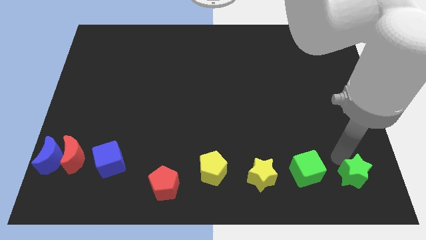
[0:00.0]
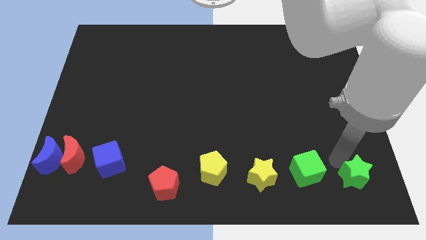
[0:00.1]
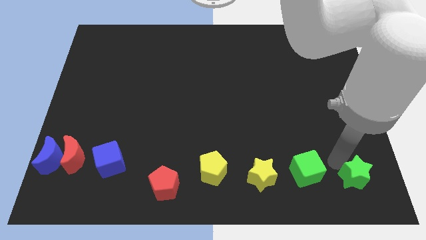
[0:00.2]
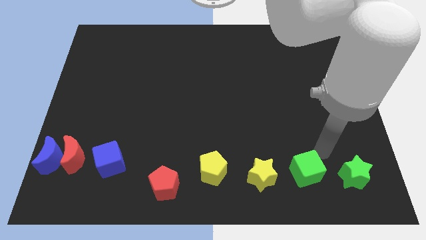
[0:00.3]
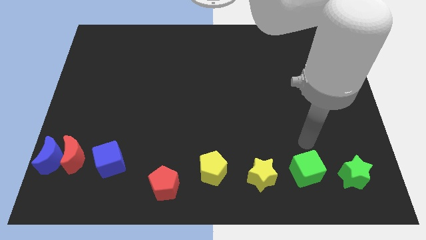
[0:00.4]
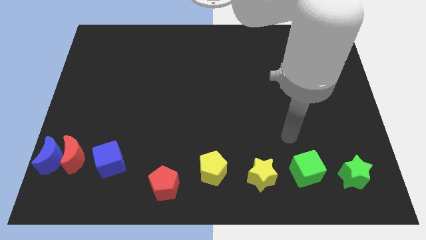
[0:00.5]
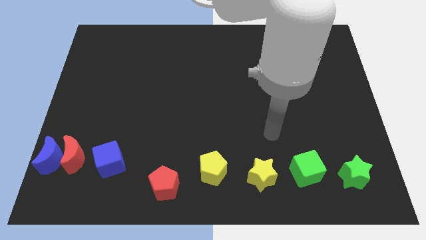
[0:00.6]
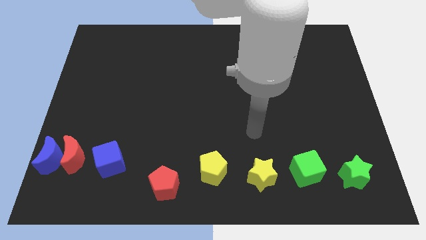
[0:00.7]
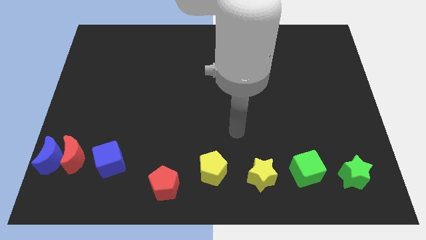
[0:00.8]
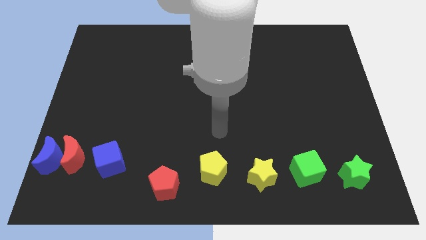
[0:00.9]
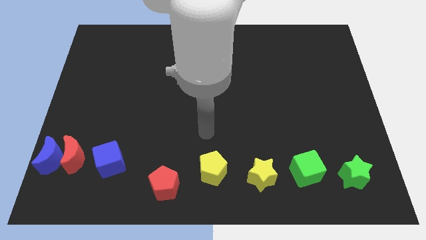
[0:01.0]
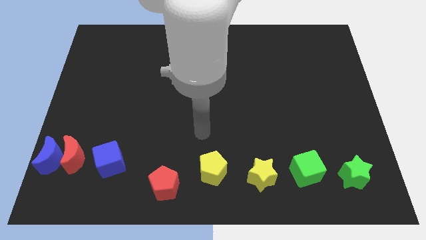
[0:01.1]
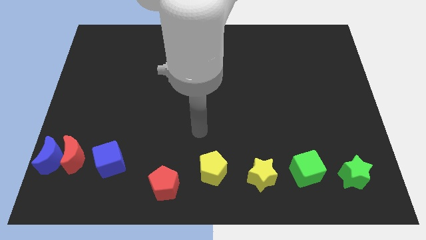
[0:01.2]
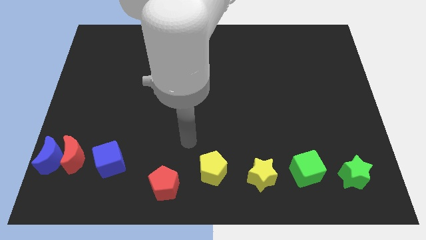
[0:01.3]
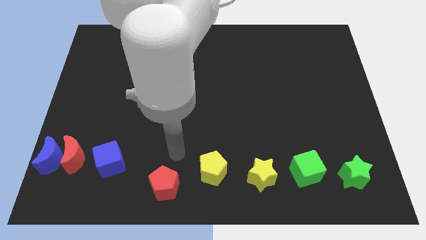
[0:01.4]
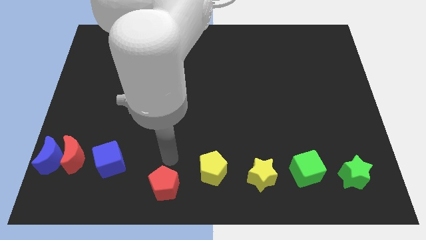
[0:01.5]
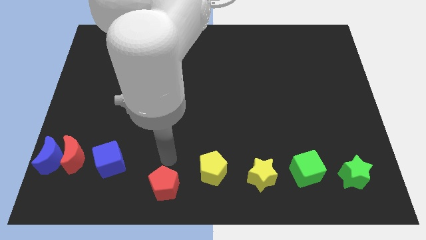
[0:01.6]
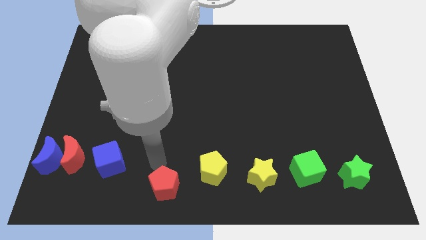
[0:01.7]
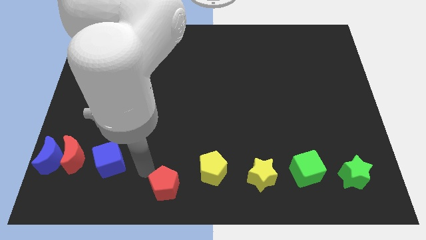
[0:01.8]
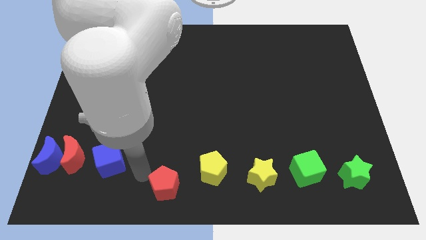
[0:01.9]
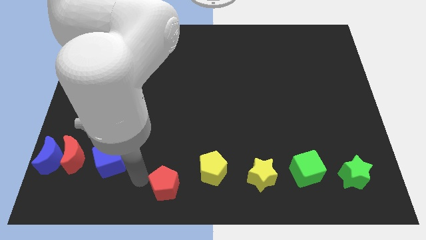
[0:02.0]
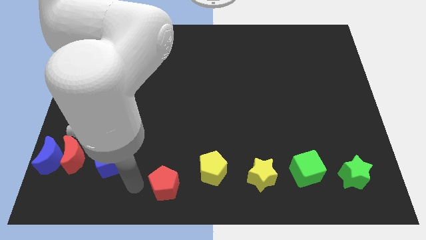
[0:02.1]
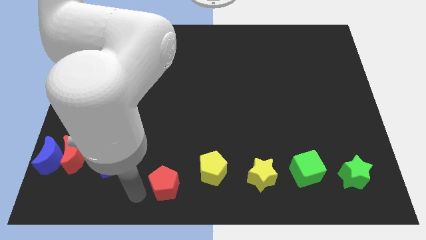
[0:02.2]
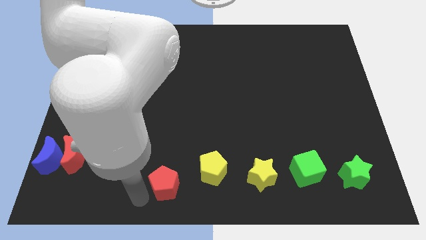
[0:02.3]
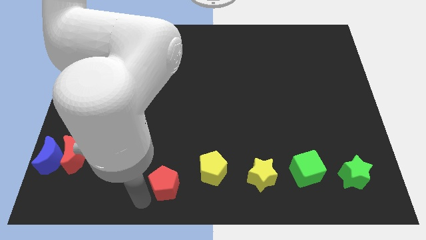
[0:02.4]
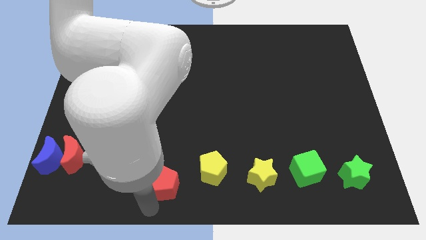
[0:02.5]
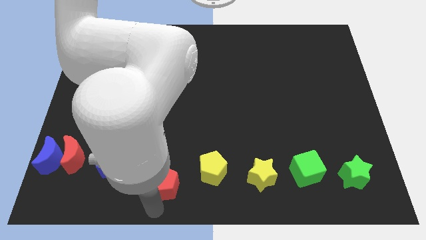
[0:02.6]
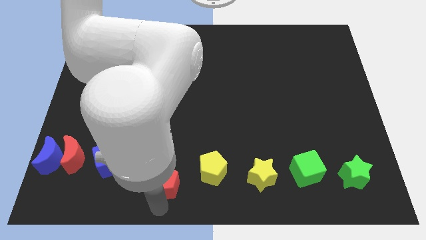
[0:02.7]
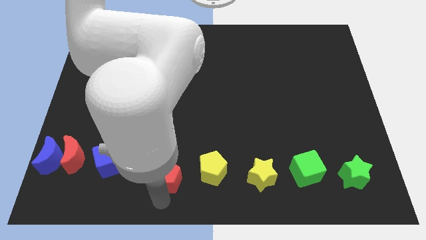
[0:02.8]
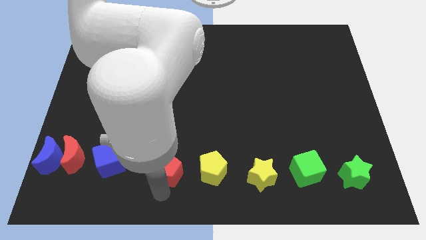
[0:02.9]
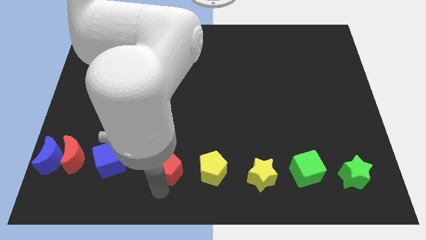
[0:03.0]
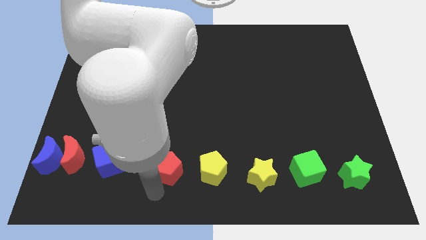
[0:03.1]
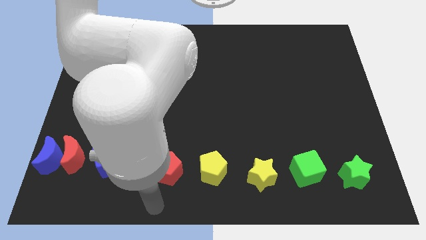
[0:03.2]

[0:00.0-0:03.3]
slide the red pentagon parallel left to the yellow pentagon

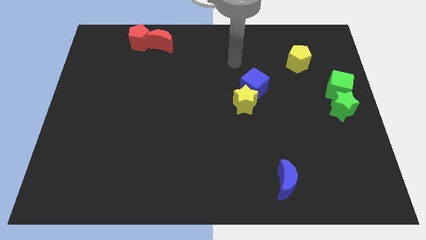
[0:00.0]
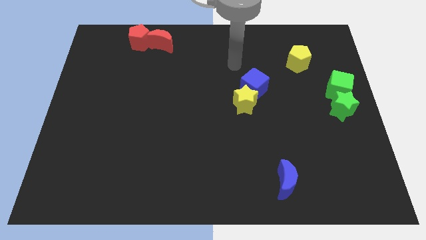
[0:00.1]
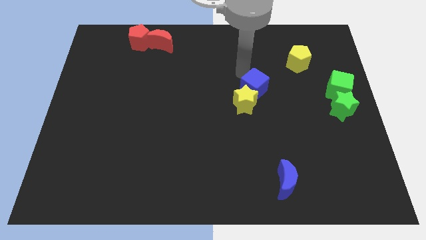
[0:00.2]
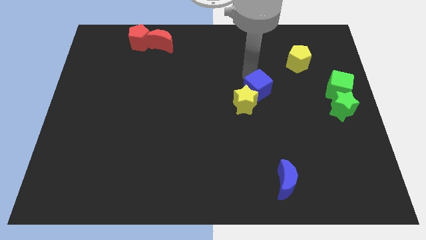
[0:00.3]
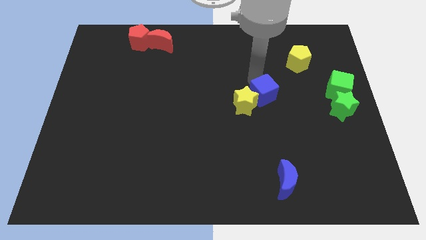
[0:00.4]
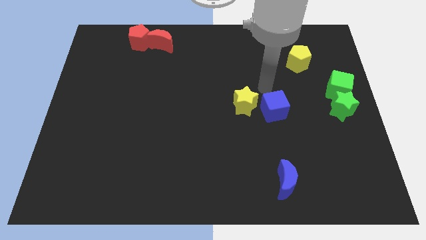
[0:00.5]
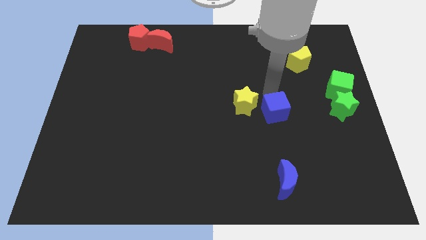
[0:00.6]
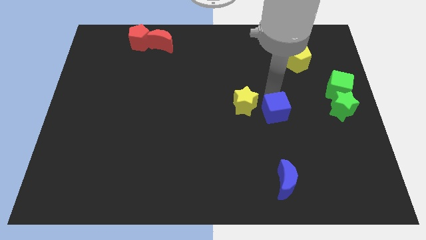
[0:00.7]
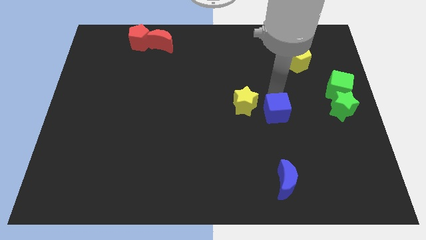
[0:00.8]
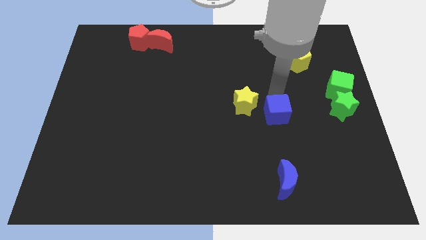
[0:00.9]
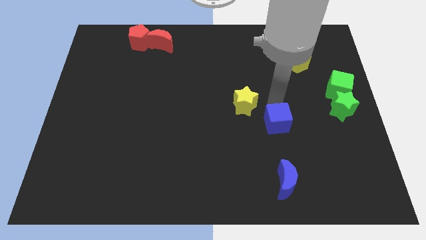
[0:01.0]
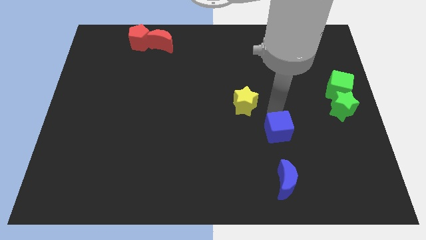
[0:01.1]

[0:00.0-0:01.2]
separate the yellow star and blue cube

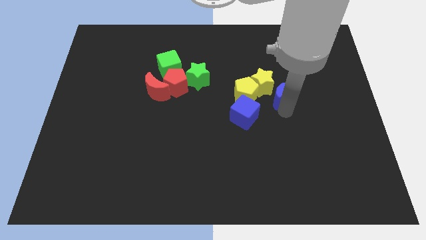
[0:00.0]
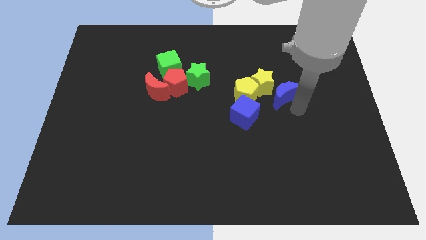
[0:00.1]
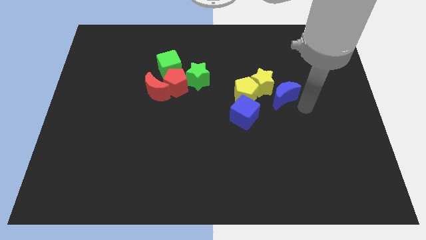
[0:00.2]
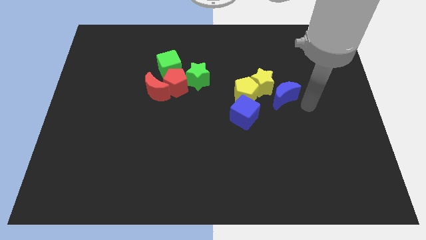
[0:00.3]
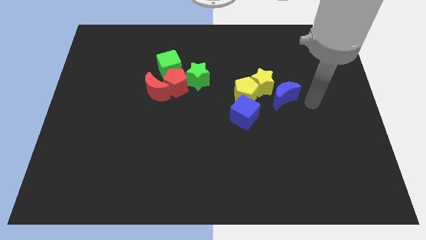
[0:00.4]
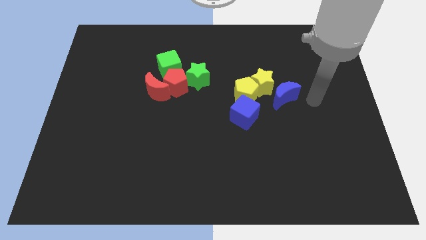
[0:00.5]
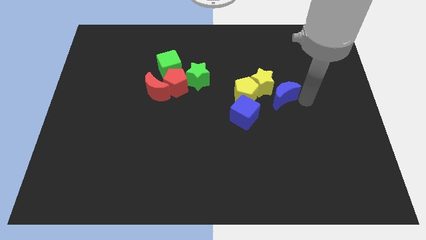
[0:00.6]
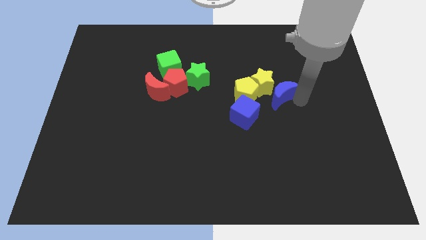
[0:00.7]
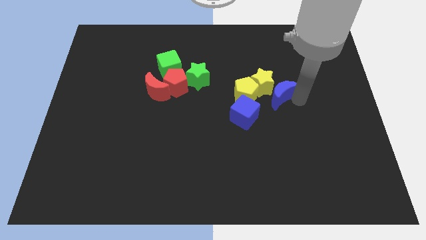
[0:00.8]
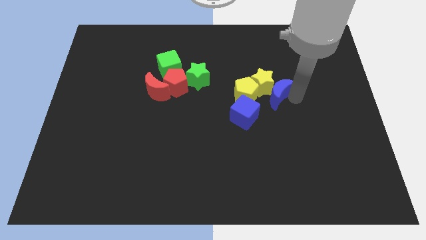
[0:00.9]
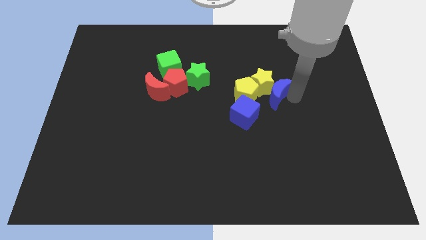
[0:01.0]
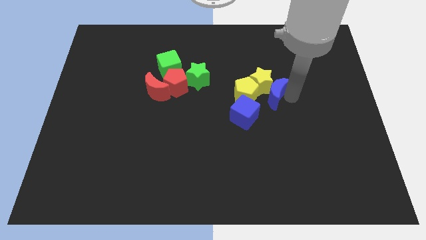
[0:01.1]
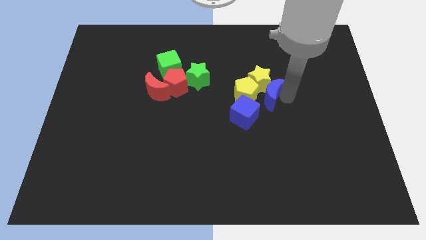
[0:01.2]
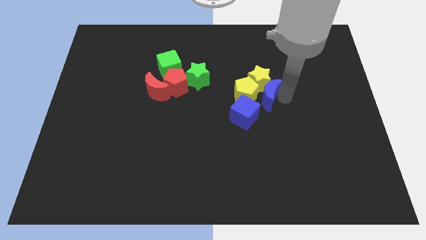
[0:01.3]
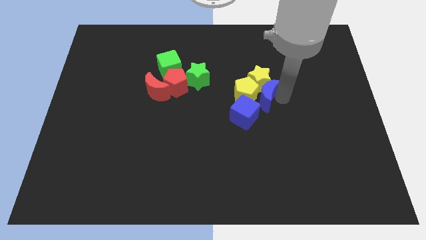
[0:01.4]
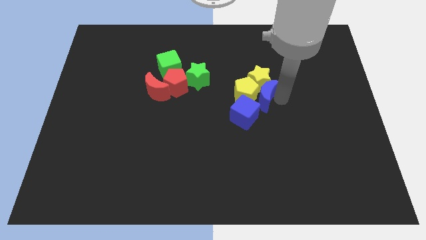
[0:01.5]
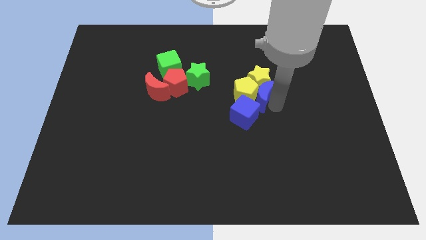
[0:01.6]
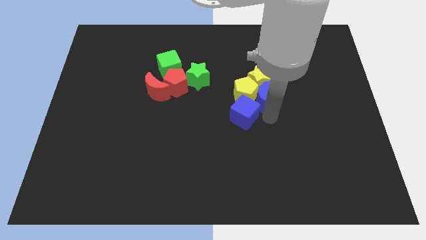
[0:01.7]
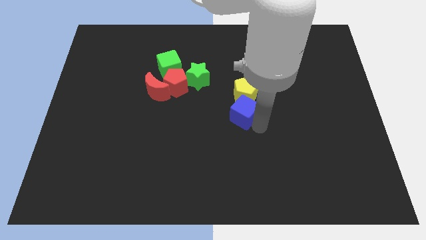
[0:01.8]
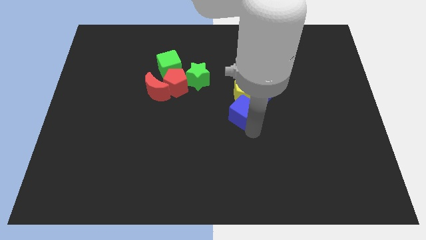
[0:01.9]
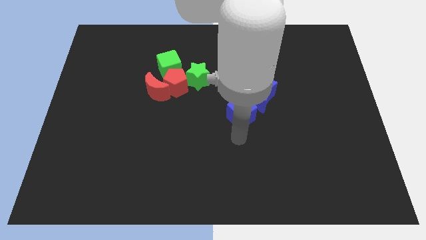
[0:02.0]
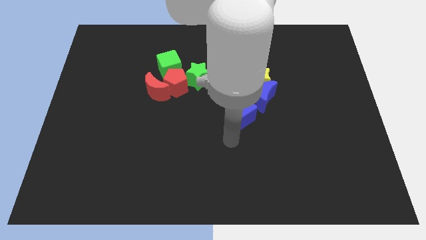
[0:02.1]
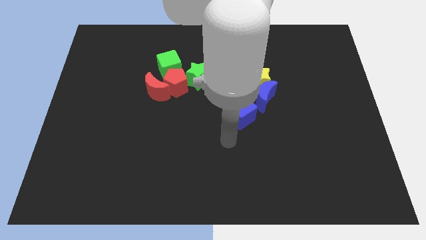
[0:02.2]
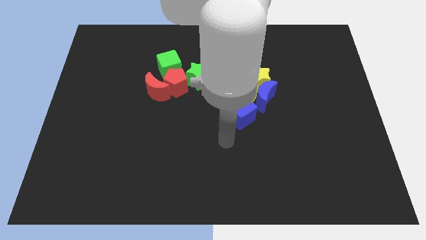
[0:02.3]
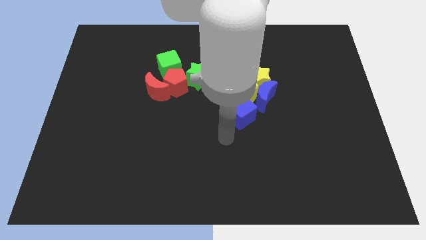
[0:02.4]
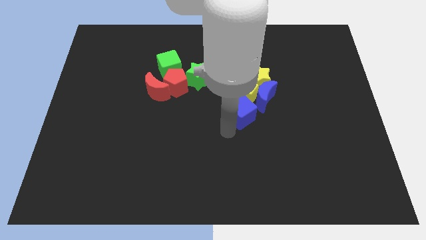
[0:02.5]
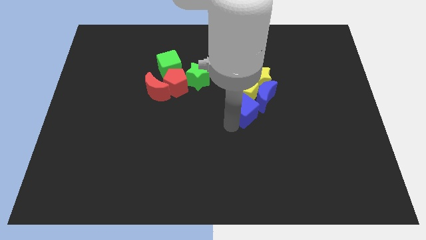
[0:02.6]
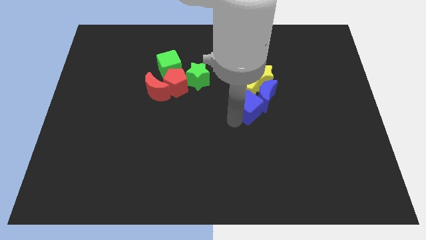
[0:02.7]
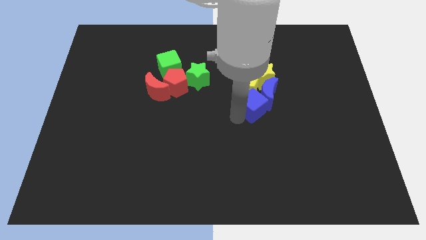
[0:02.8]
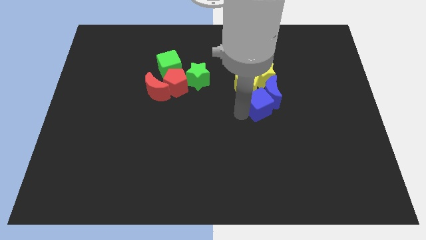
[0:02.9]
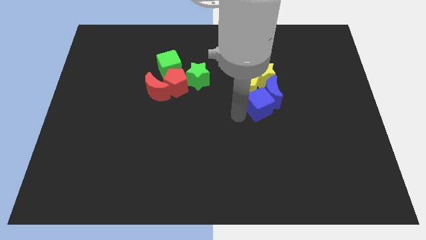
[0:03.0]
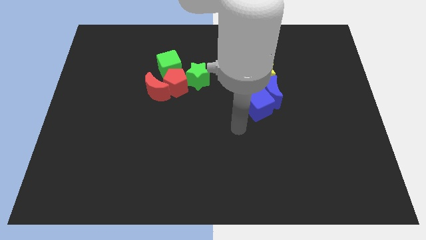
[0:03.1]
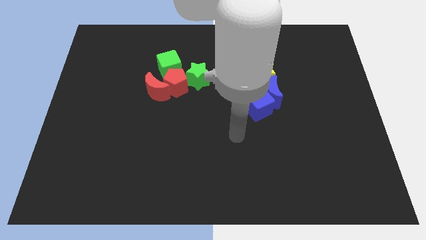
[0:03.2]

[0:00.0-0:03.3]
arrange blue blocks under the yellow blocks

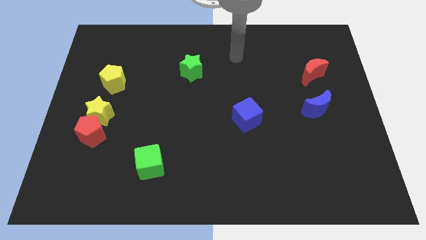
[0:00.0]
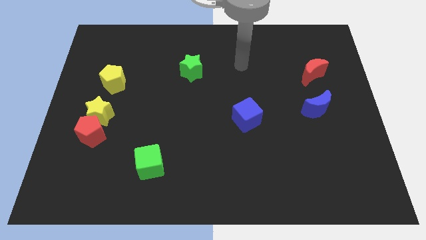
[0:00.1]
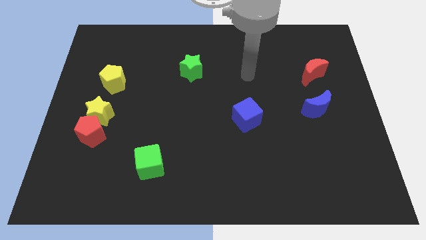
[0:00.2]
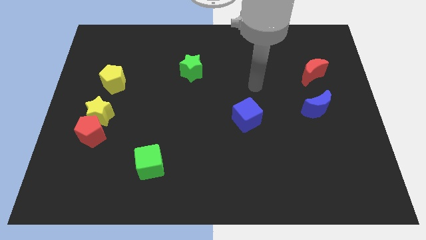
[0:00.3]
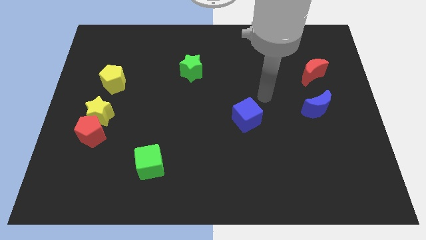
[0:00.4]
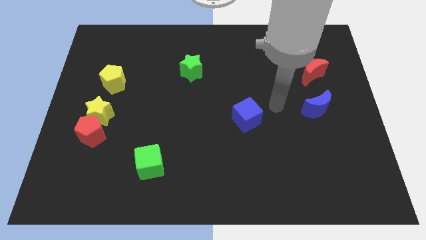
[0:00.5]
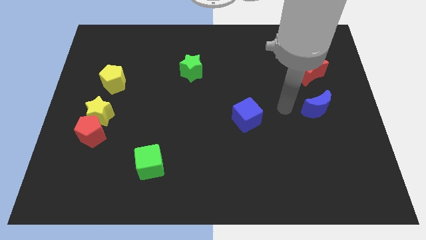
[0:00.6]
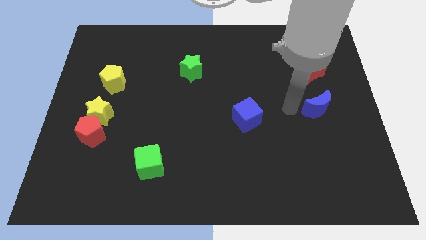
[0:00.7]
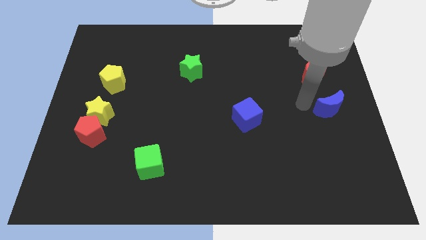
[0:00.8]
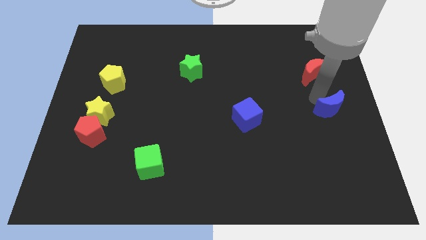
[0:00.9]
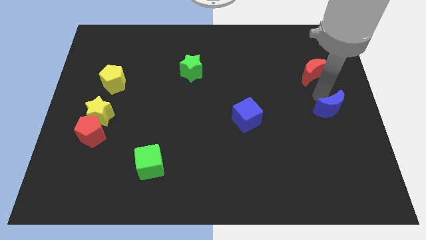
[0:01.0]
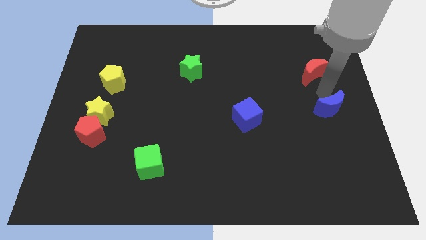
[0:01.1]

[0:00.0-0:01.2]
push blue moon slightly towards down
